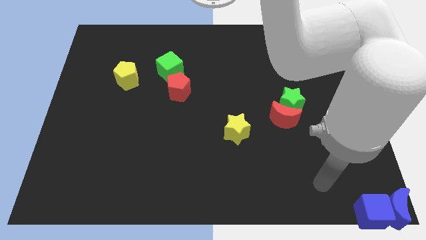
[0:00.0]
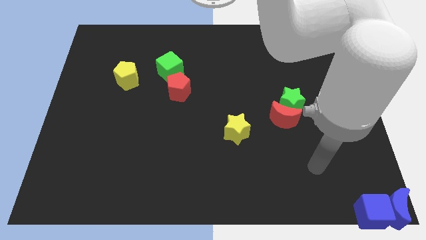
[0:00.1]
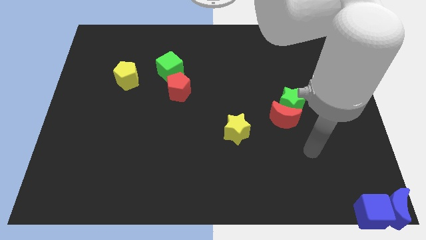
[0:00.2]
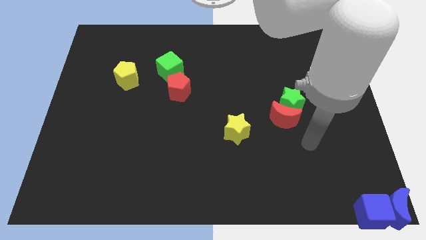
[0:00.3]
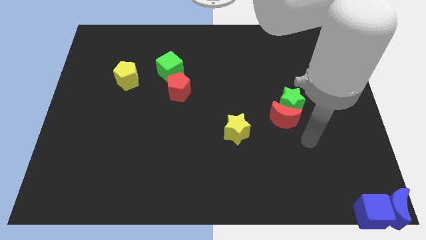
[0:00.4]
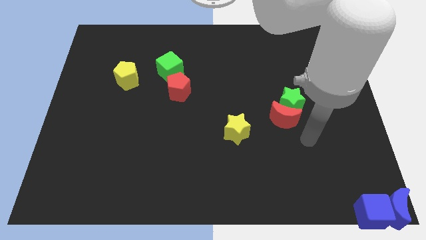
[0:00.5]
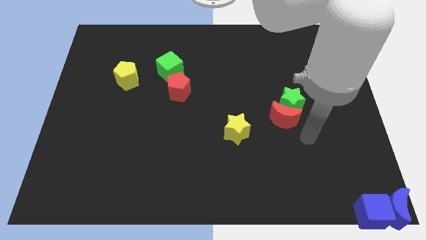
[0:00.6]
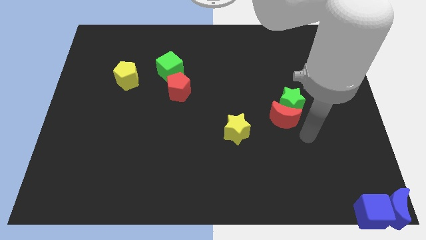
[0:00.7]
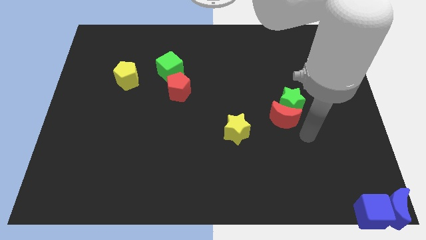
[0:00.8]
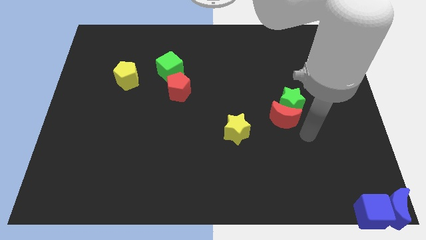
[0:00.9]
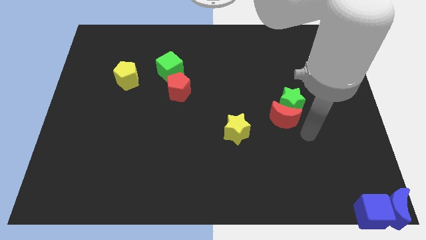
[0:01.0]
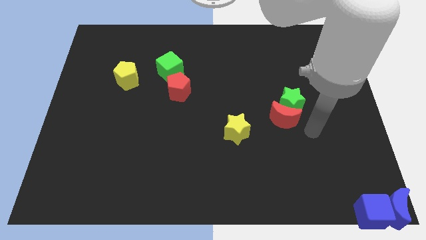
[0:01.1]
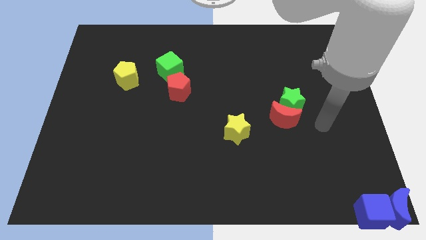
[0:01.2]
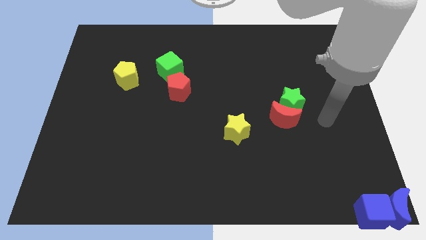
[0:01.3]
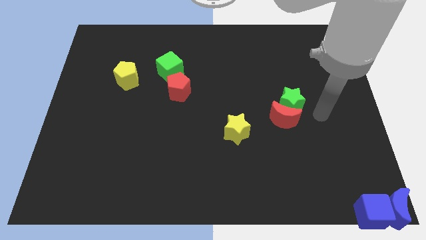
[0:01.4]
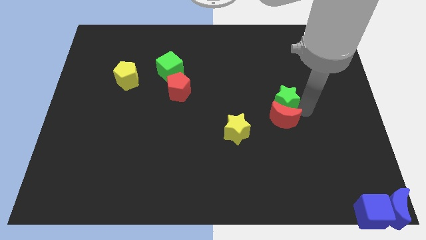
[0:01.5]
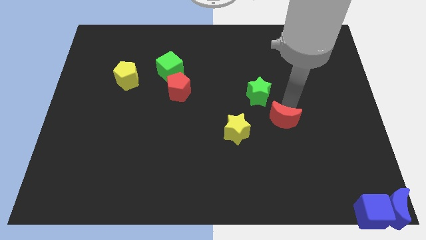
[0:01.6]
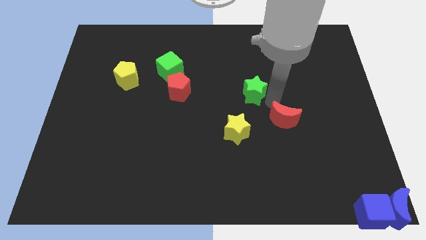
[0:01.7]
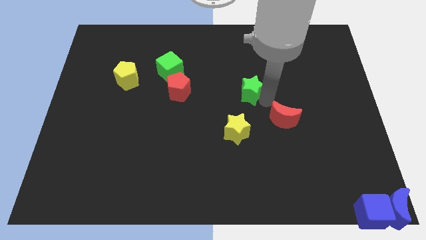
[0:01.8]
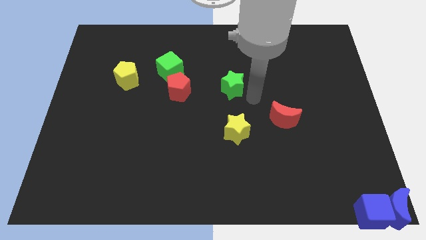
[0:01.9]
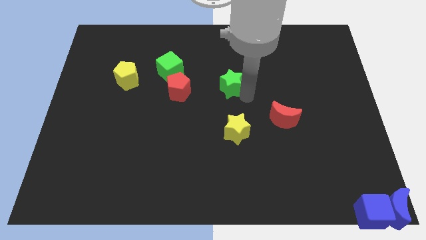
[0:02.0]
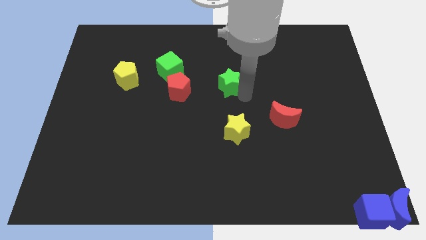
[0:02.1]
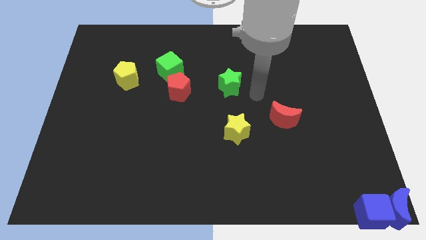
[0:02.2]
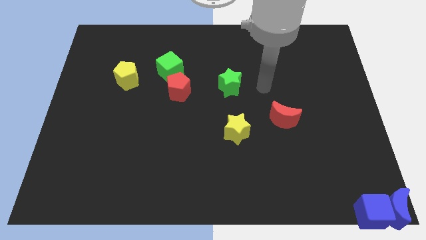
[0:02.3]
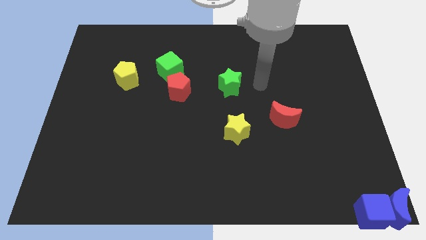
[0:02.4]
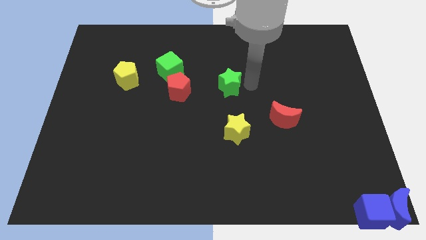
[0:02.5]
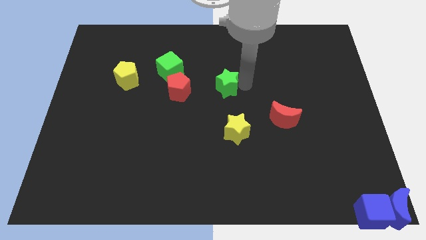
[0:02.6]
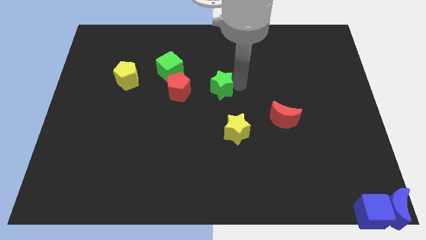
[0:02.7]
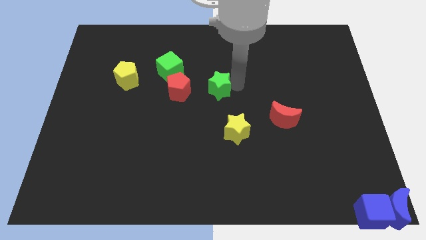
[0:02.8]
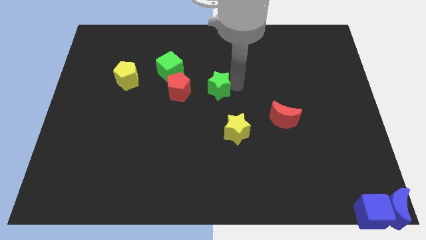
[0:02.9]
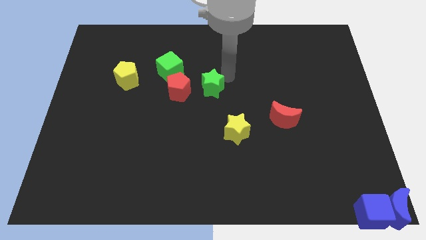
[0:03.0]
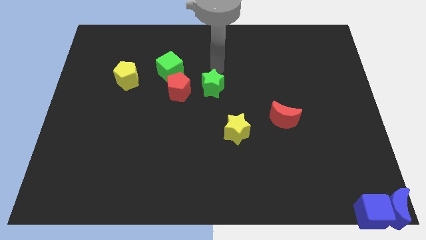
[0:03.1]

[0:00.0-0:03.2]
separate green star from the red crescent

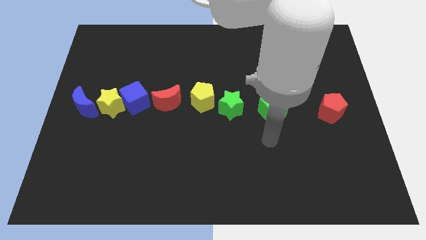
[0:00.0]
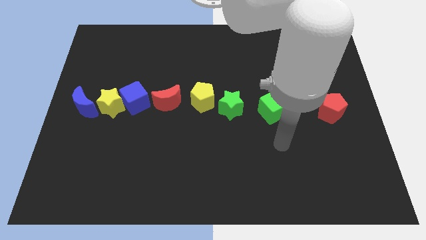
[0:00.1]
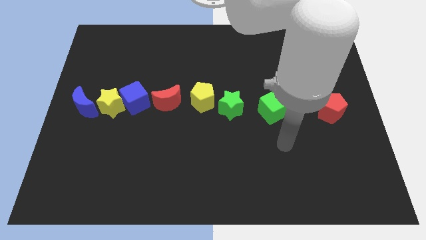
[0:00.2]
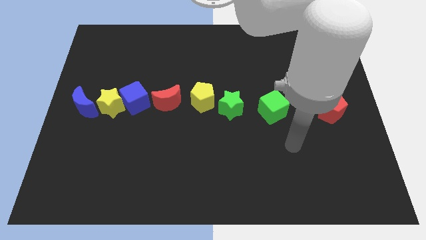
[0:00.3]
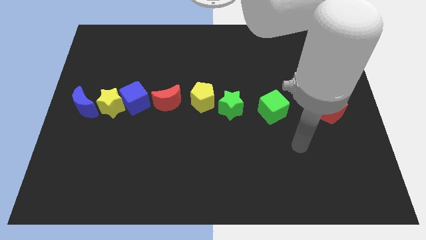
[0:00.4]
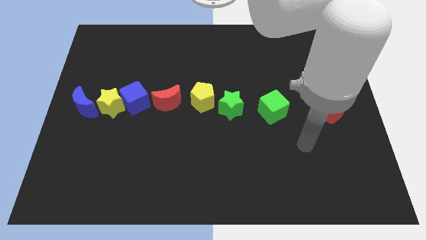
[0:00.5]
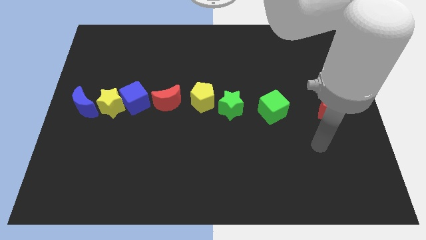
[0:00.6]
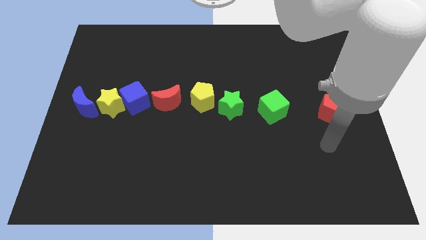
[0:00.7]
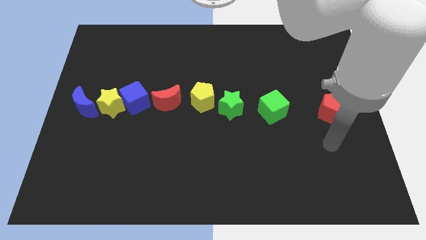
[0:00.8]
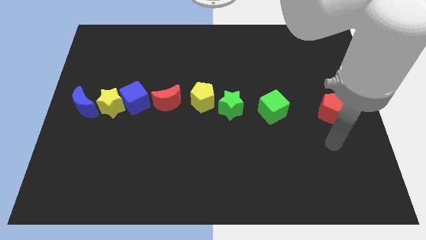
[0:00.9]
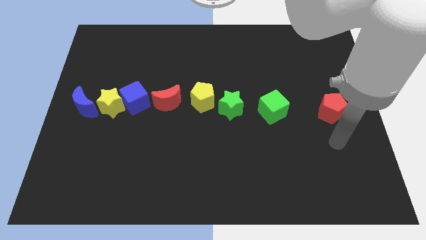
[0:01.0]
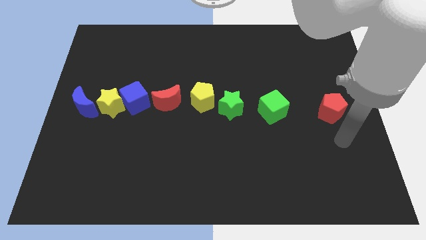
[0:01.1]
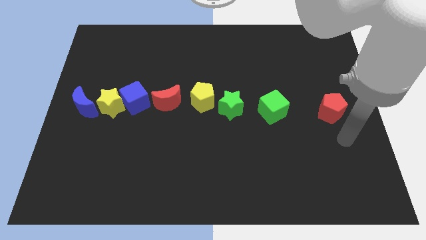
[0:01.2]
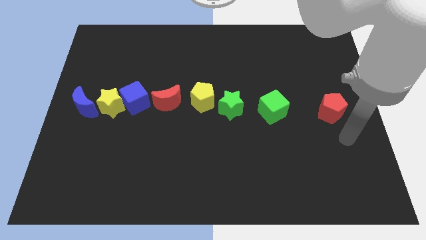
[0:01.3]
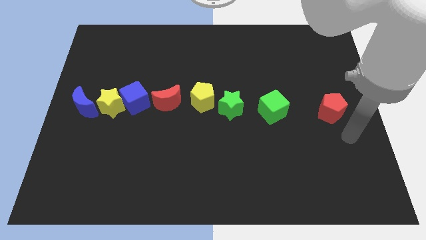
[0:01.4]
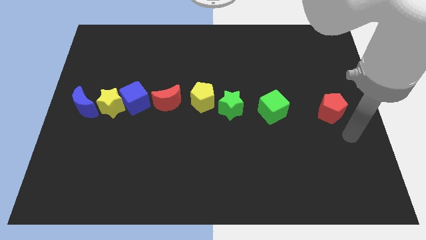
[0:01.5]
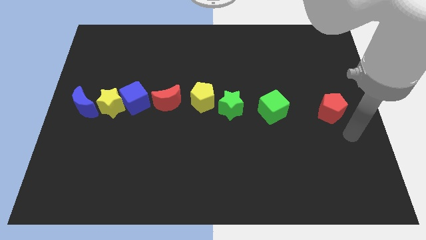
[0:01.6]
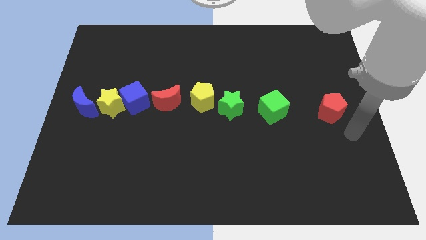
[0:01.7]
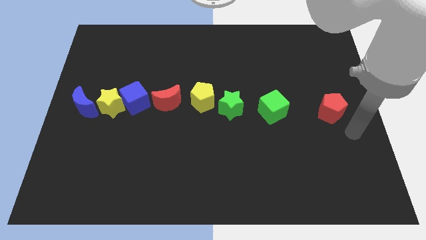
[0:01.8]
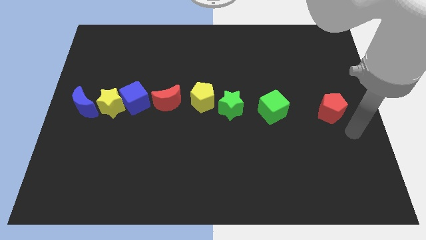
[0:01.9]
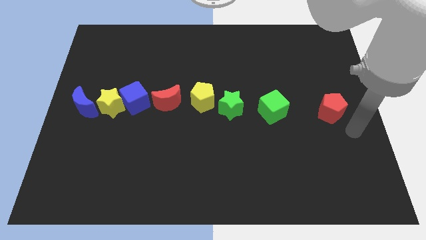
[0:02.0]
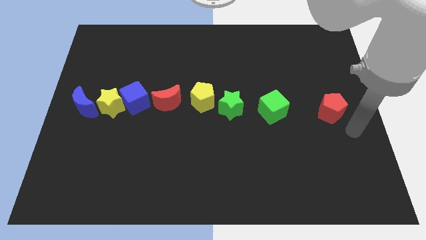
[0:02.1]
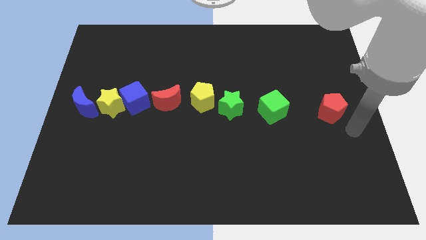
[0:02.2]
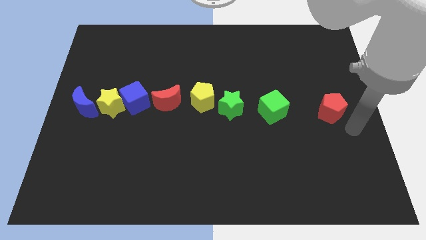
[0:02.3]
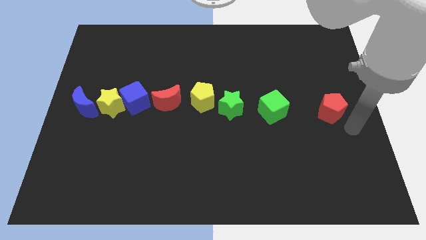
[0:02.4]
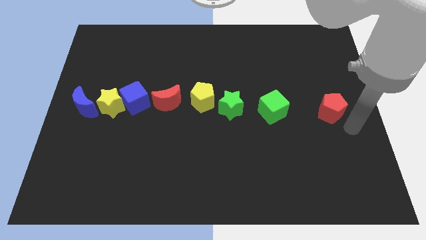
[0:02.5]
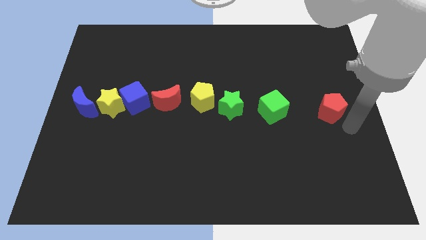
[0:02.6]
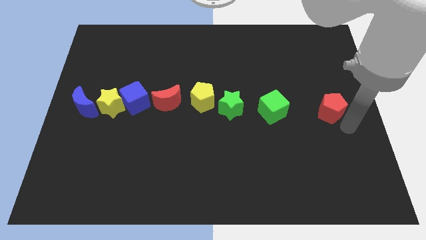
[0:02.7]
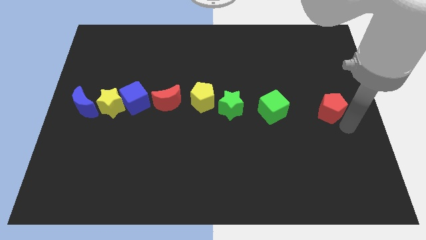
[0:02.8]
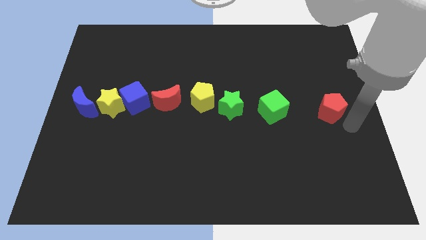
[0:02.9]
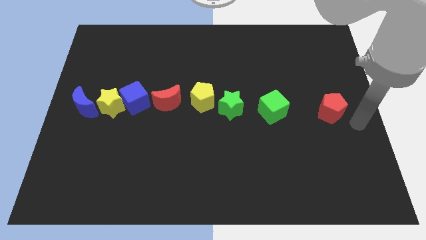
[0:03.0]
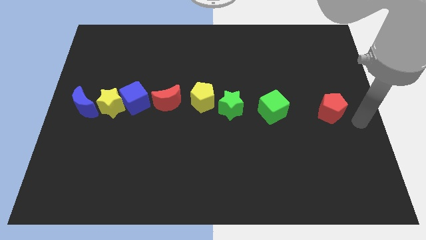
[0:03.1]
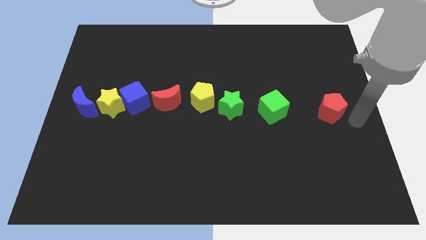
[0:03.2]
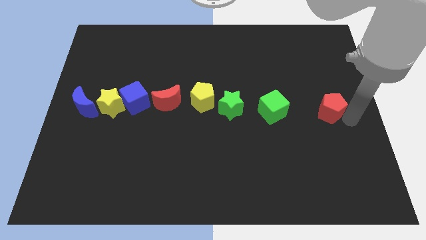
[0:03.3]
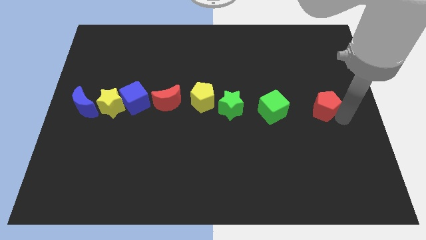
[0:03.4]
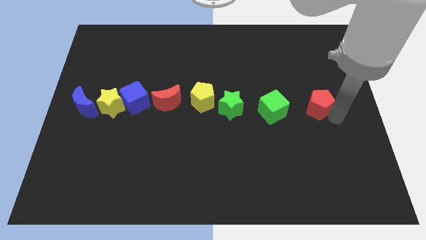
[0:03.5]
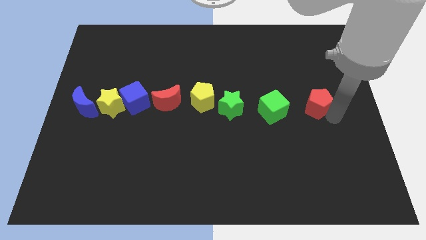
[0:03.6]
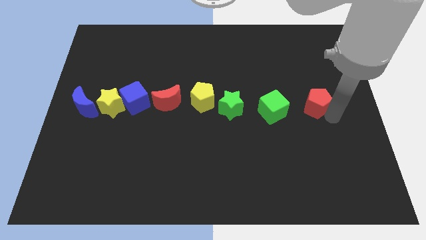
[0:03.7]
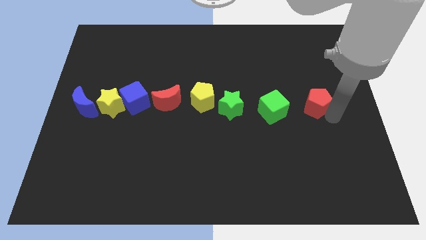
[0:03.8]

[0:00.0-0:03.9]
slightly push the red pentagon close to the green cube

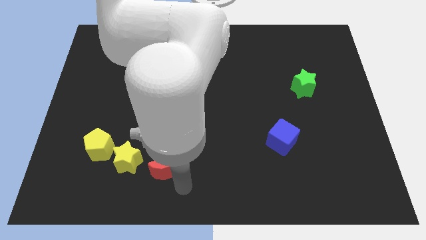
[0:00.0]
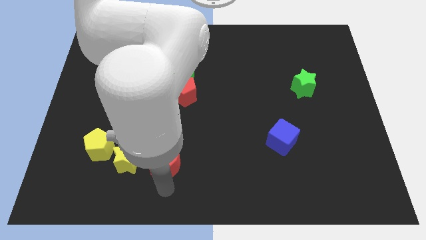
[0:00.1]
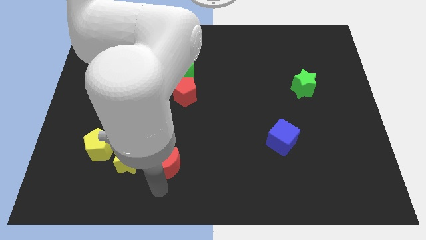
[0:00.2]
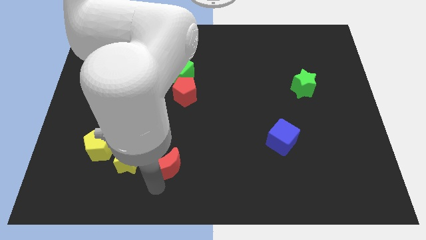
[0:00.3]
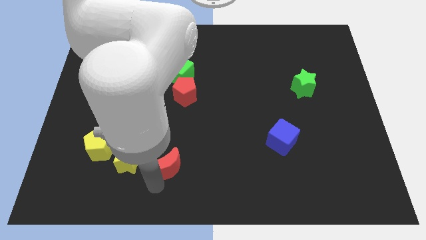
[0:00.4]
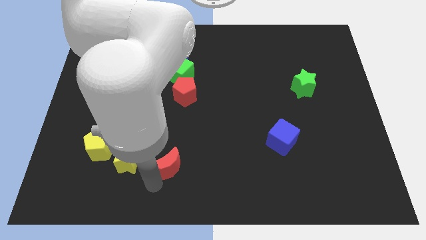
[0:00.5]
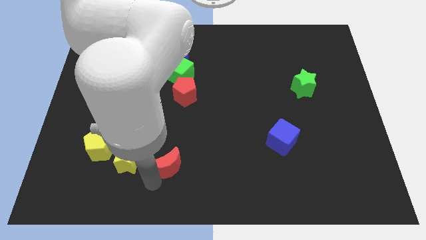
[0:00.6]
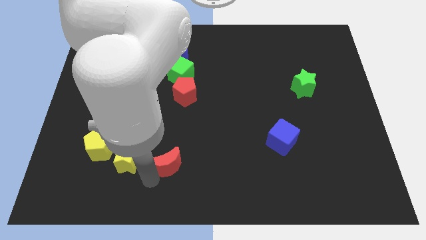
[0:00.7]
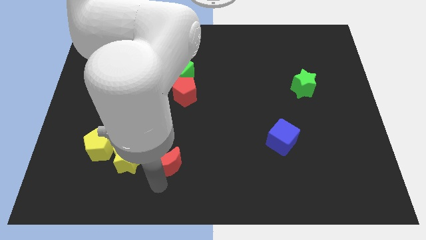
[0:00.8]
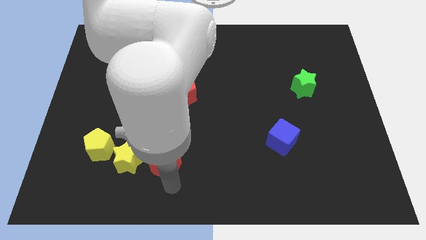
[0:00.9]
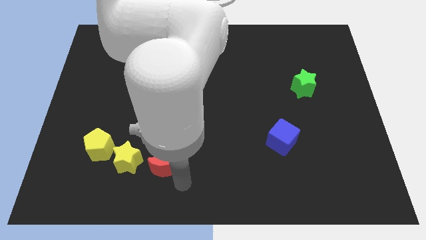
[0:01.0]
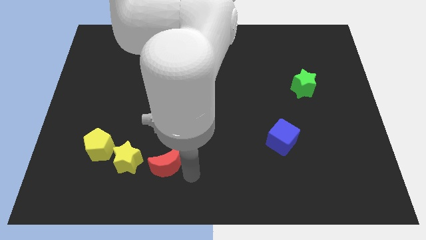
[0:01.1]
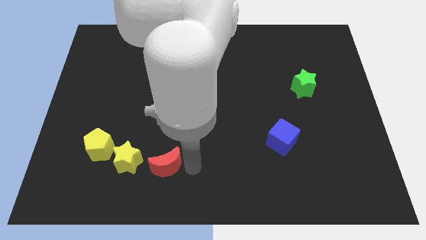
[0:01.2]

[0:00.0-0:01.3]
move the red moon right to the yellow star

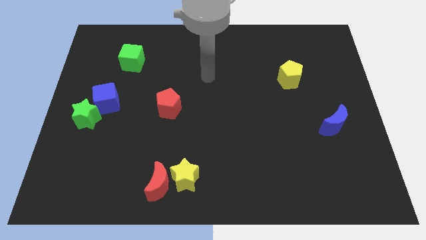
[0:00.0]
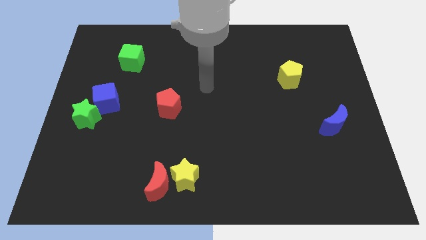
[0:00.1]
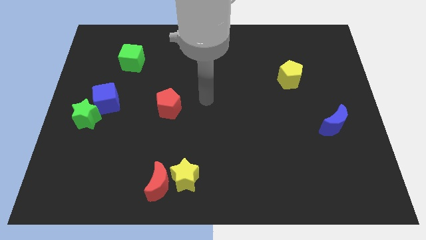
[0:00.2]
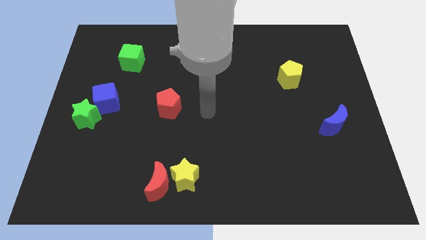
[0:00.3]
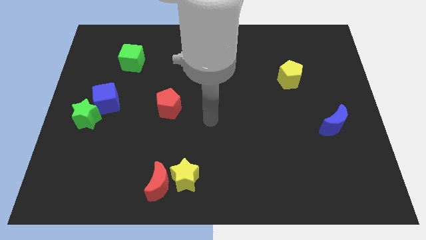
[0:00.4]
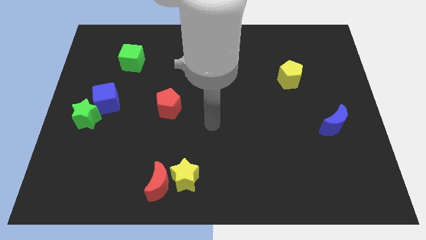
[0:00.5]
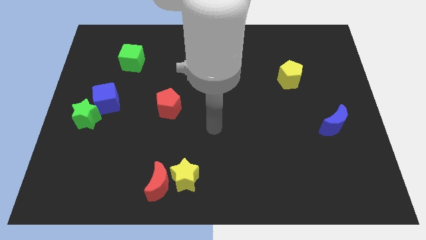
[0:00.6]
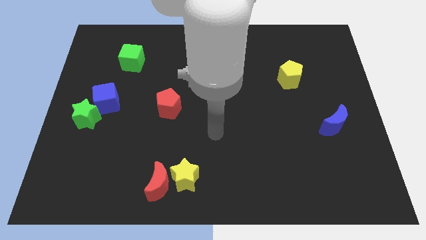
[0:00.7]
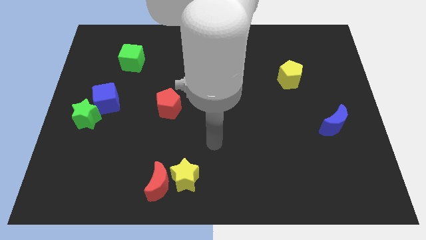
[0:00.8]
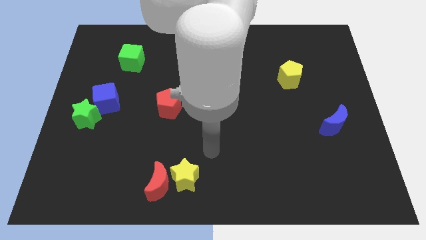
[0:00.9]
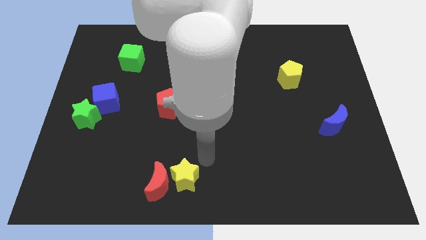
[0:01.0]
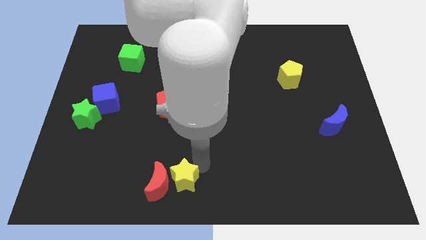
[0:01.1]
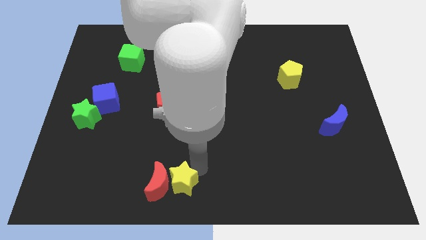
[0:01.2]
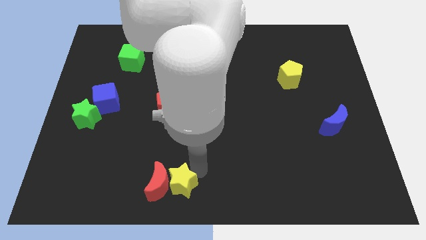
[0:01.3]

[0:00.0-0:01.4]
place the arm above the yellow star
